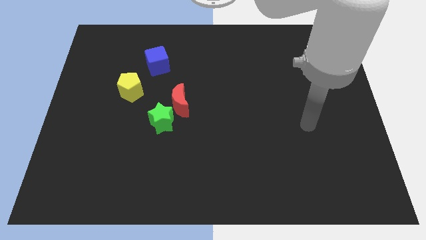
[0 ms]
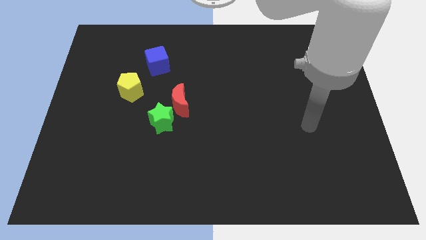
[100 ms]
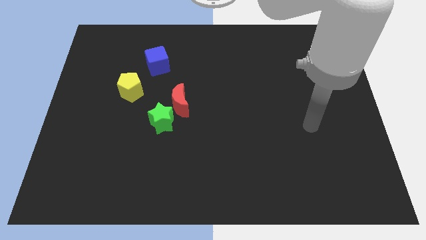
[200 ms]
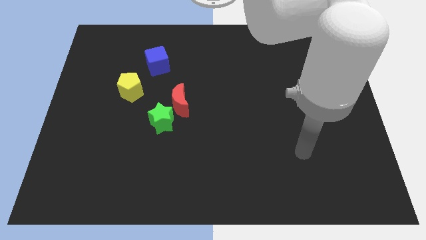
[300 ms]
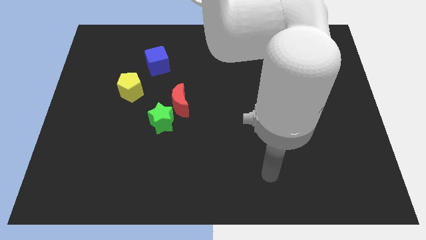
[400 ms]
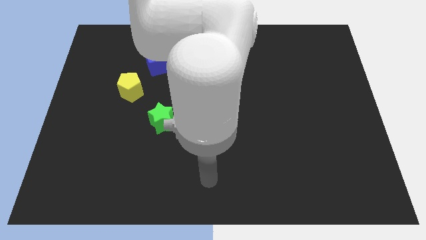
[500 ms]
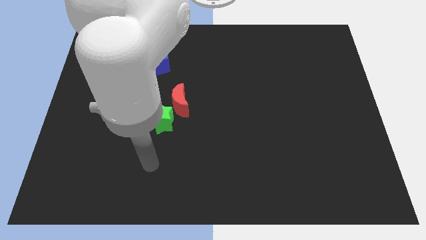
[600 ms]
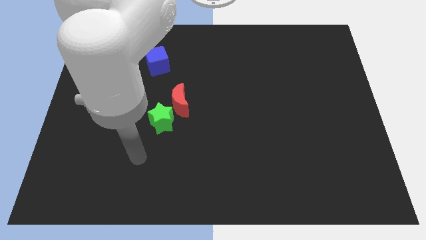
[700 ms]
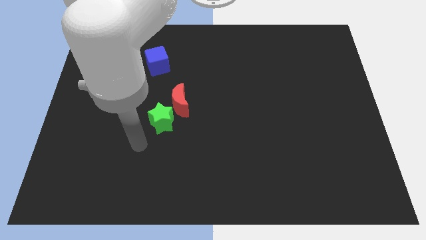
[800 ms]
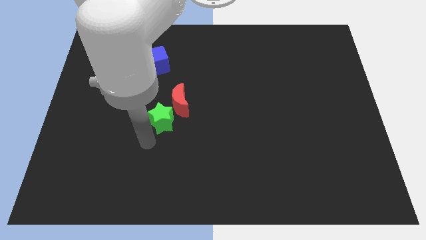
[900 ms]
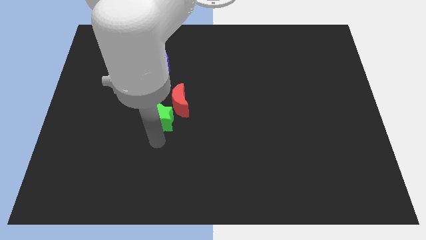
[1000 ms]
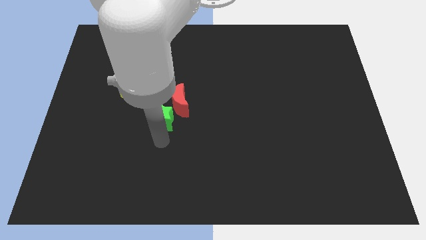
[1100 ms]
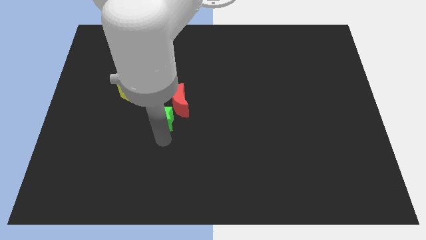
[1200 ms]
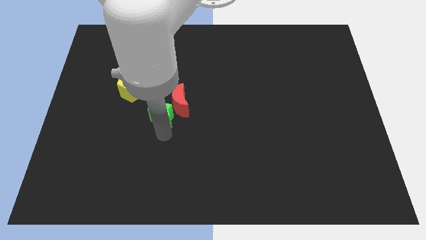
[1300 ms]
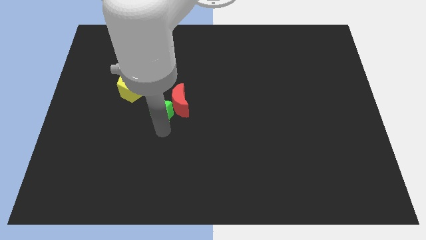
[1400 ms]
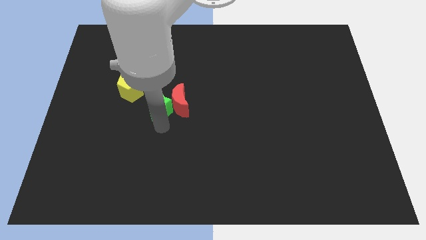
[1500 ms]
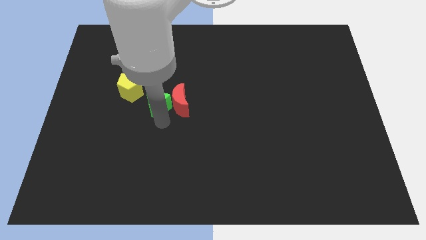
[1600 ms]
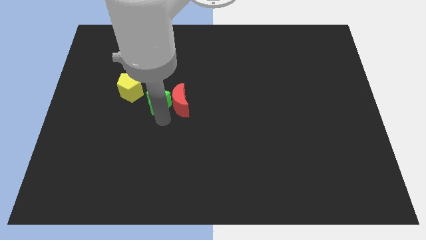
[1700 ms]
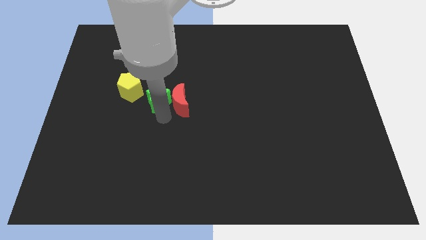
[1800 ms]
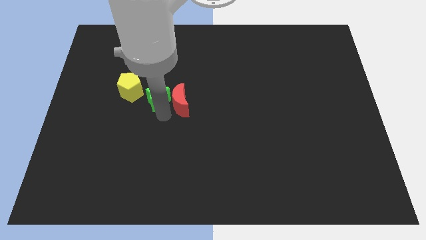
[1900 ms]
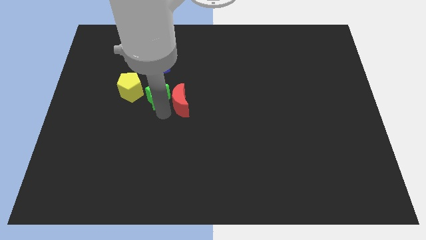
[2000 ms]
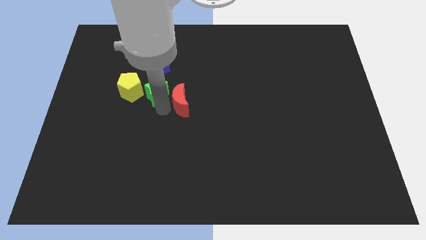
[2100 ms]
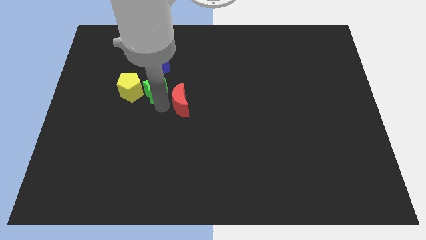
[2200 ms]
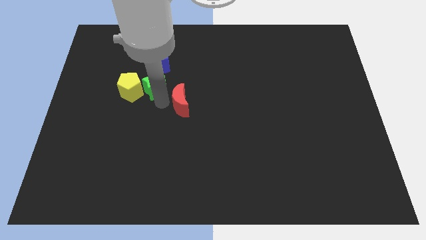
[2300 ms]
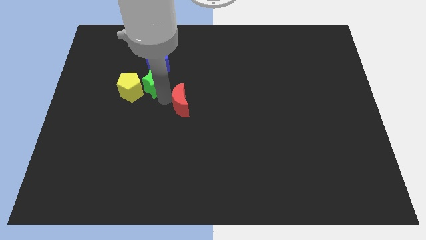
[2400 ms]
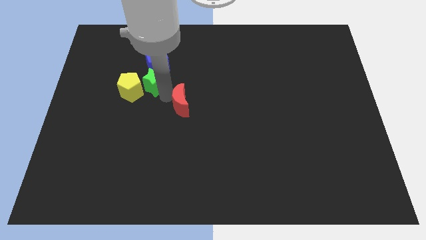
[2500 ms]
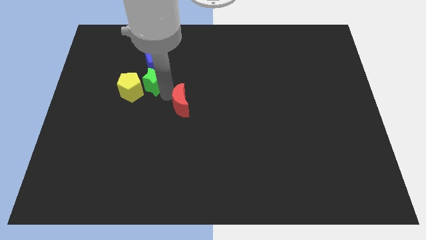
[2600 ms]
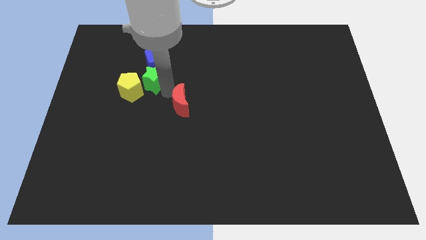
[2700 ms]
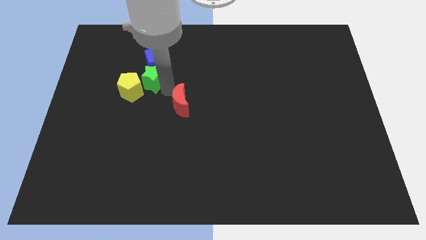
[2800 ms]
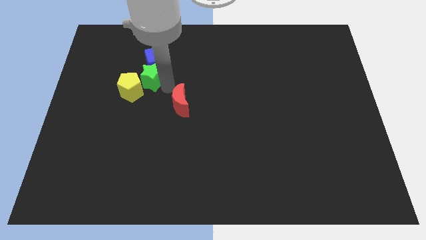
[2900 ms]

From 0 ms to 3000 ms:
slide the green block to the blue cube

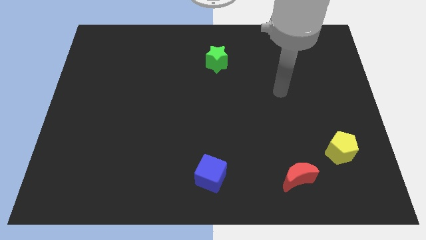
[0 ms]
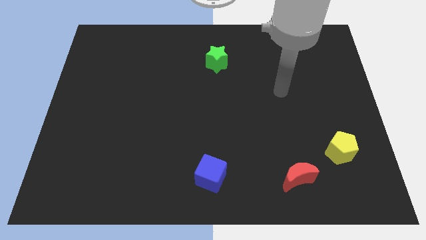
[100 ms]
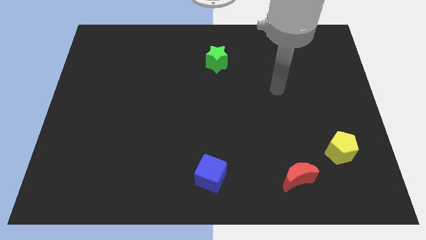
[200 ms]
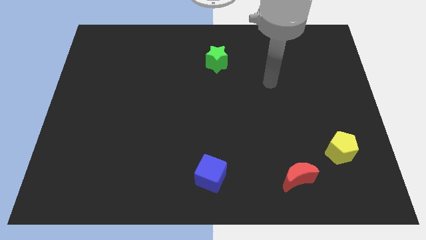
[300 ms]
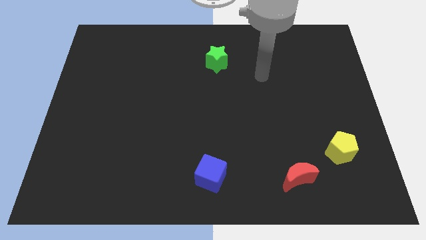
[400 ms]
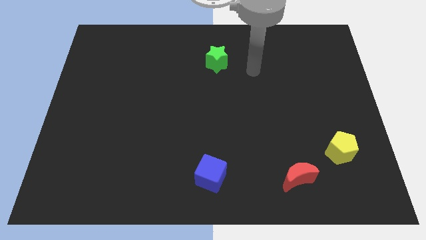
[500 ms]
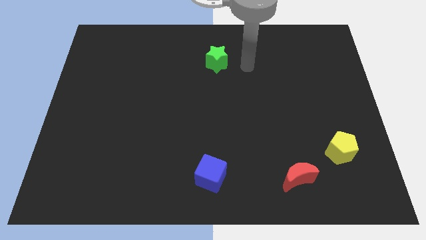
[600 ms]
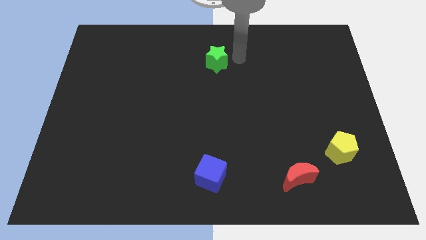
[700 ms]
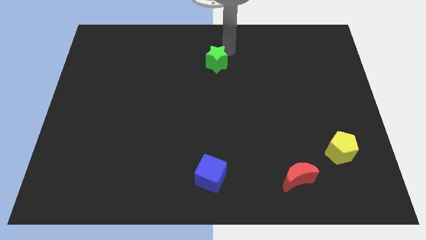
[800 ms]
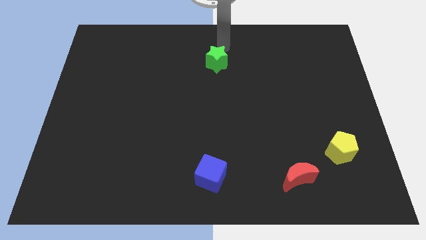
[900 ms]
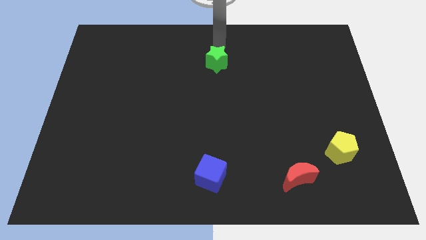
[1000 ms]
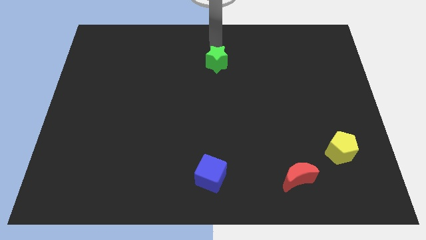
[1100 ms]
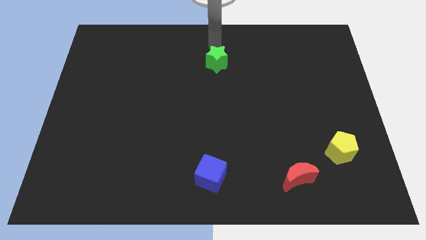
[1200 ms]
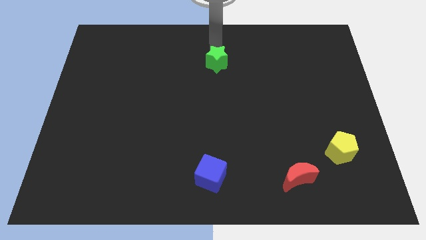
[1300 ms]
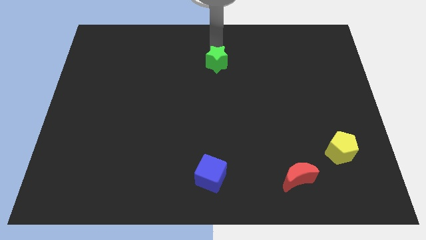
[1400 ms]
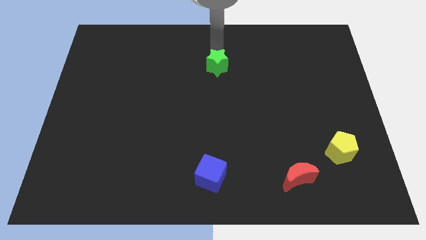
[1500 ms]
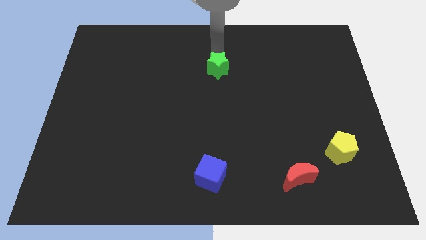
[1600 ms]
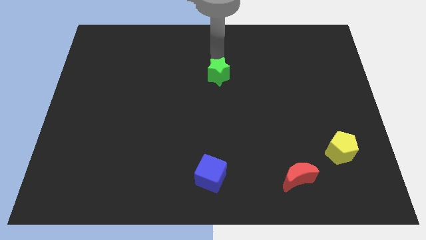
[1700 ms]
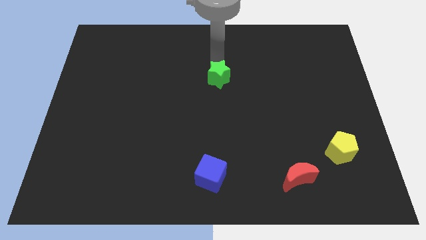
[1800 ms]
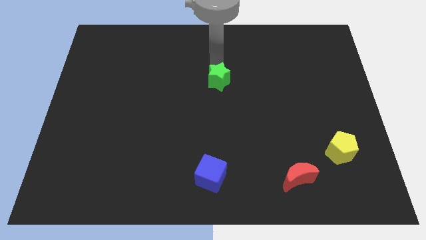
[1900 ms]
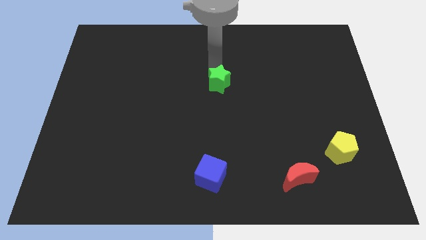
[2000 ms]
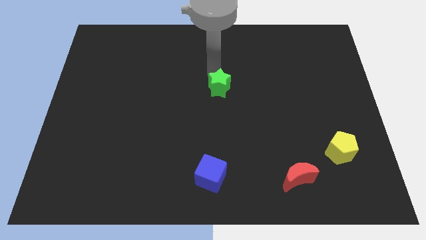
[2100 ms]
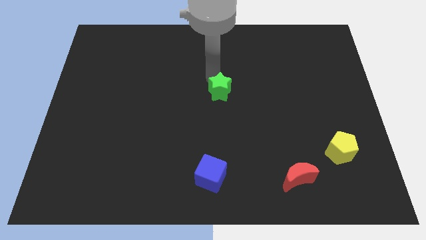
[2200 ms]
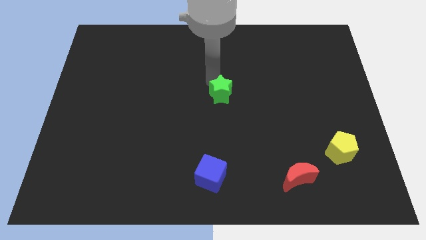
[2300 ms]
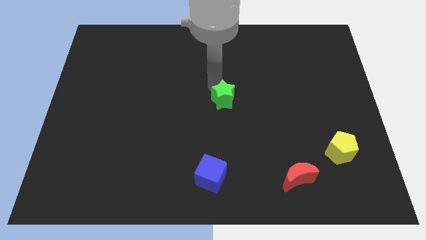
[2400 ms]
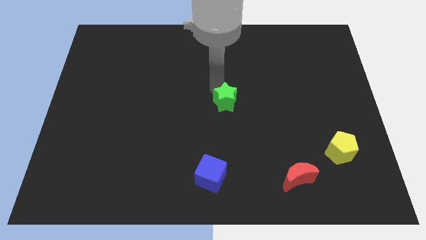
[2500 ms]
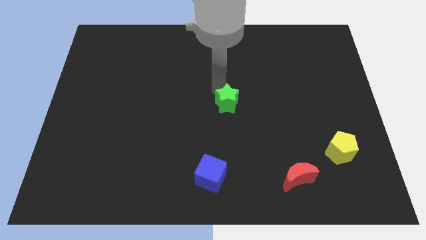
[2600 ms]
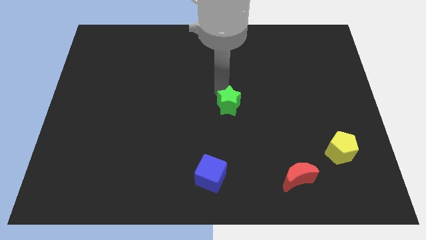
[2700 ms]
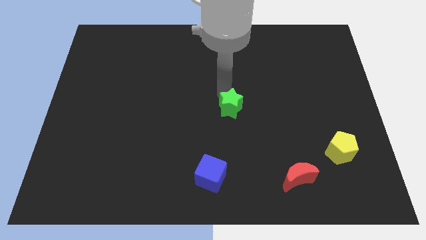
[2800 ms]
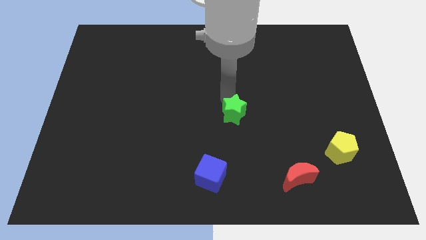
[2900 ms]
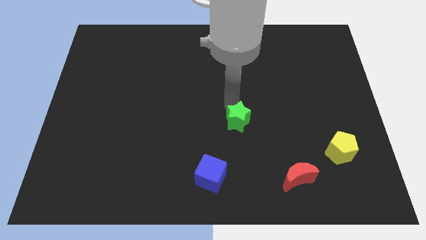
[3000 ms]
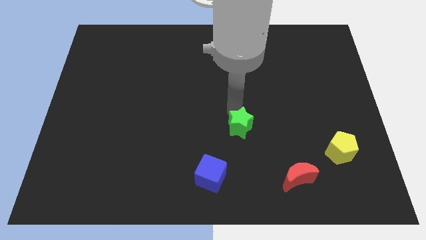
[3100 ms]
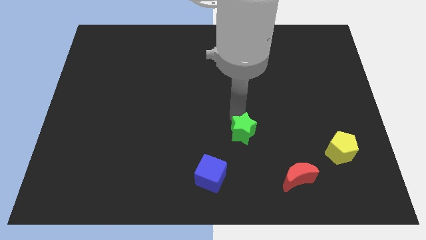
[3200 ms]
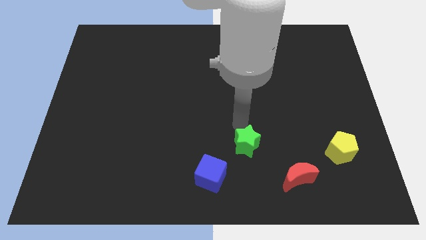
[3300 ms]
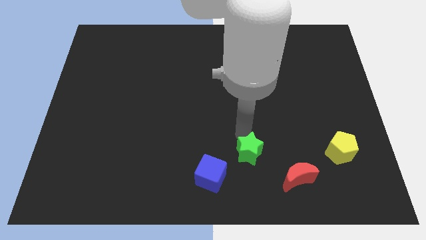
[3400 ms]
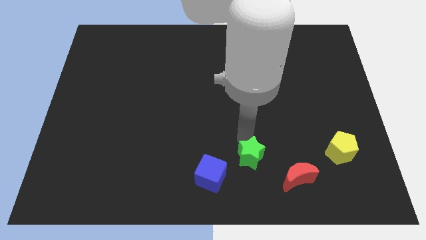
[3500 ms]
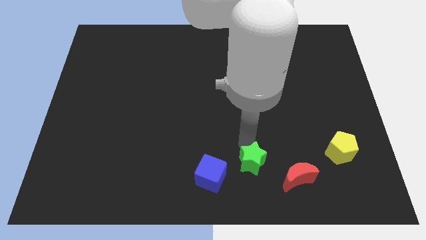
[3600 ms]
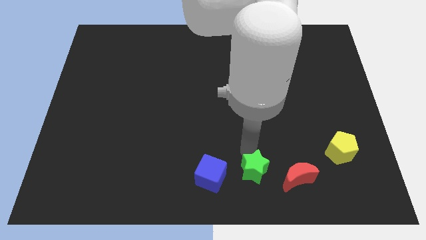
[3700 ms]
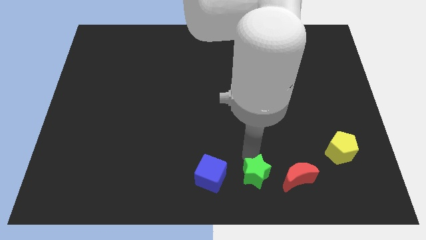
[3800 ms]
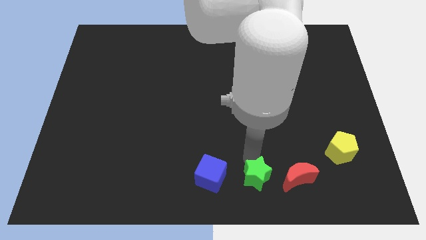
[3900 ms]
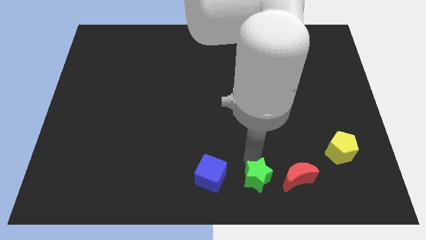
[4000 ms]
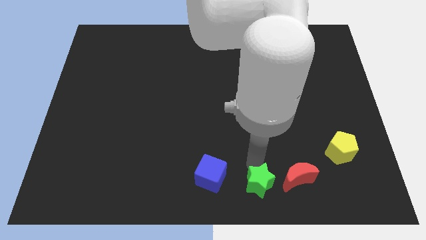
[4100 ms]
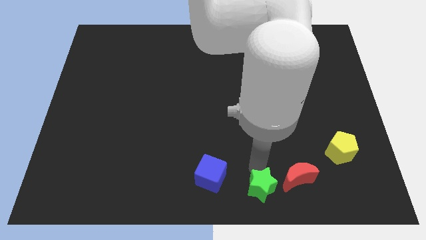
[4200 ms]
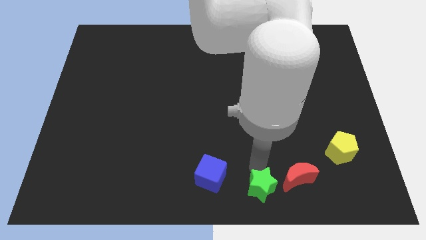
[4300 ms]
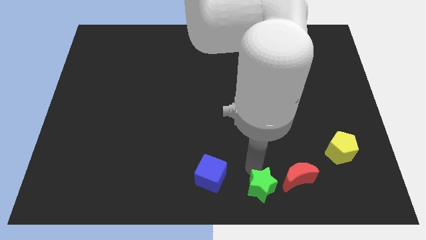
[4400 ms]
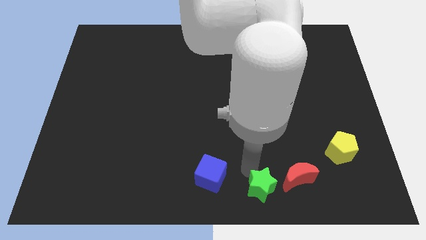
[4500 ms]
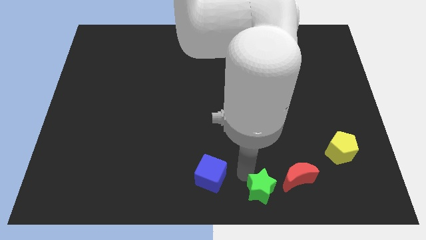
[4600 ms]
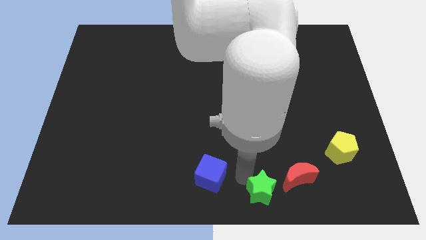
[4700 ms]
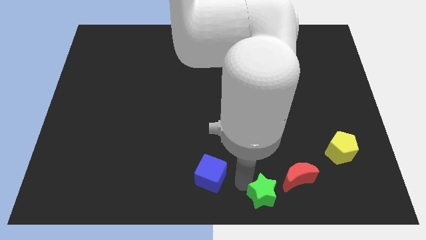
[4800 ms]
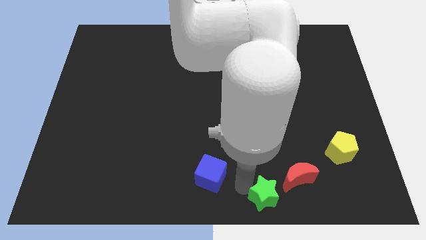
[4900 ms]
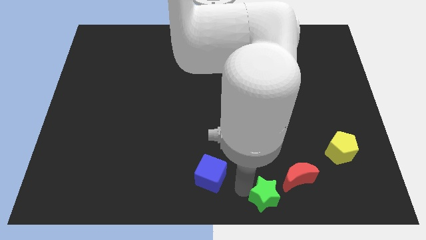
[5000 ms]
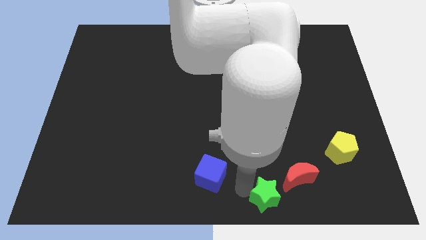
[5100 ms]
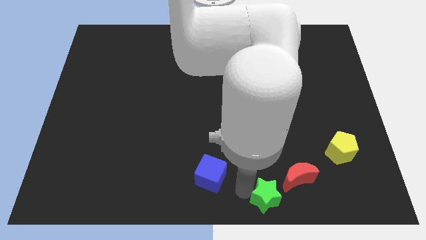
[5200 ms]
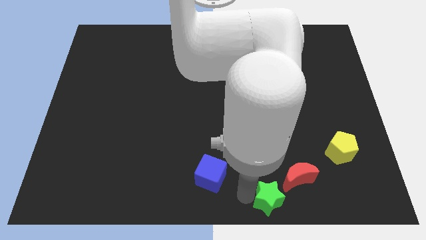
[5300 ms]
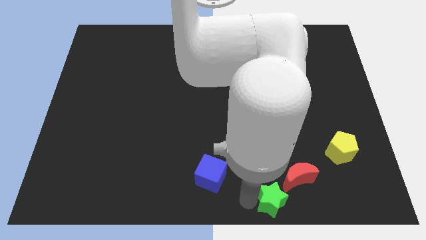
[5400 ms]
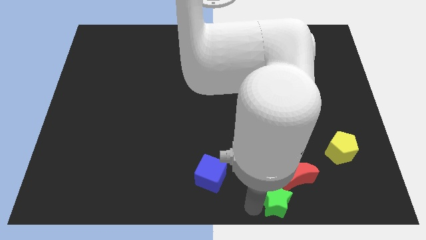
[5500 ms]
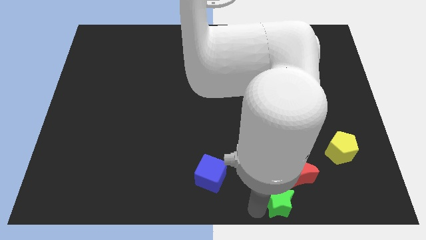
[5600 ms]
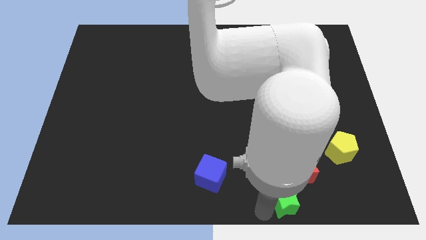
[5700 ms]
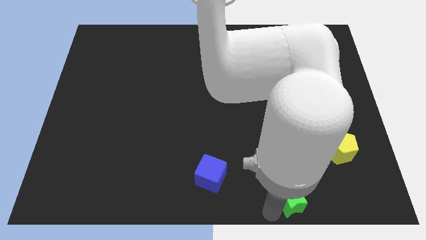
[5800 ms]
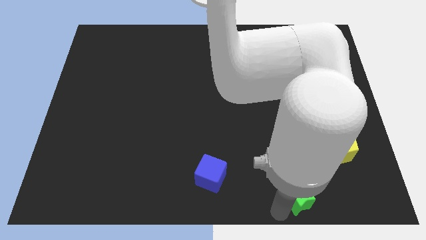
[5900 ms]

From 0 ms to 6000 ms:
move the green block close to the red moon
